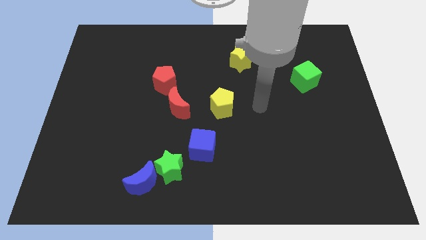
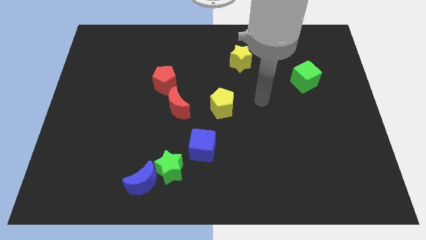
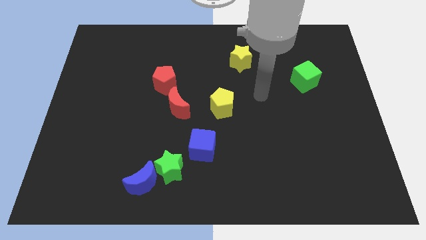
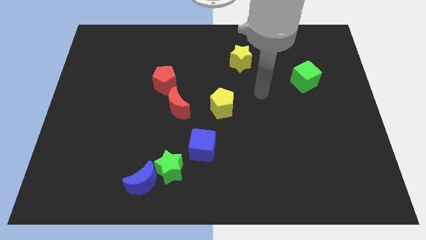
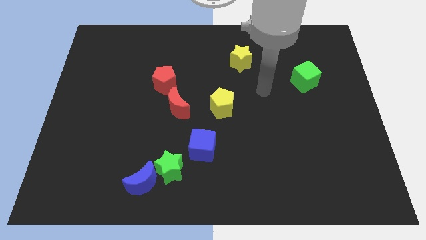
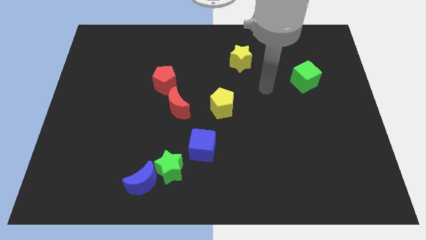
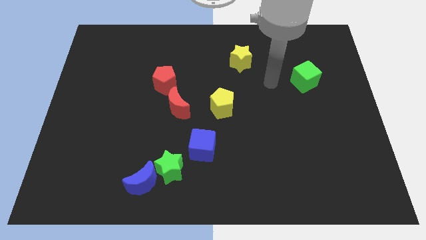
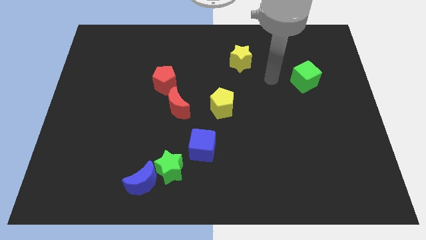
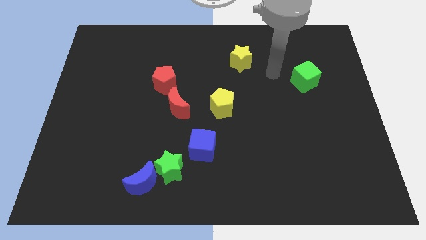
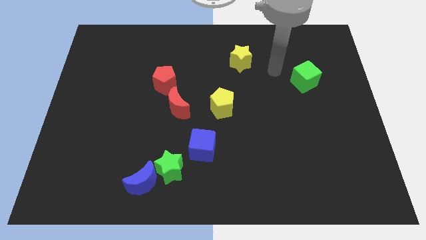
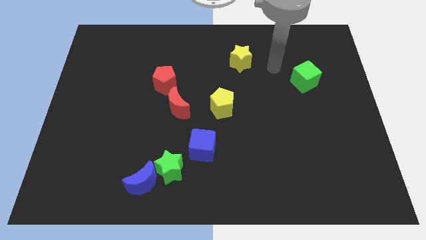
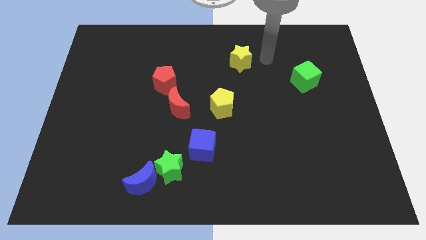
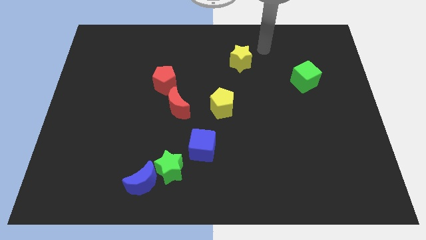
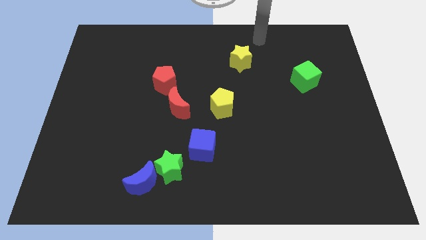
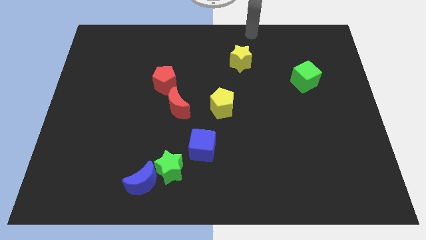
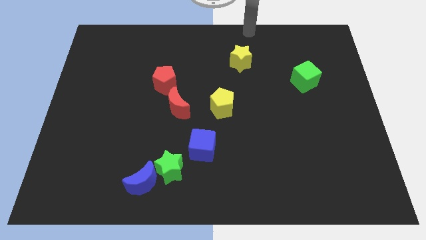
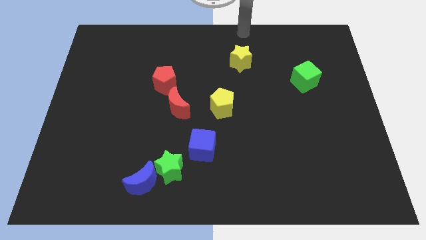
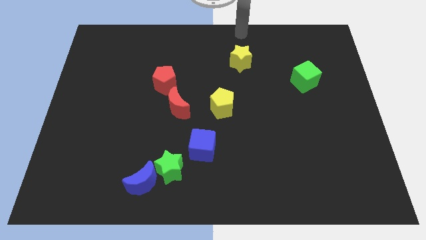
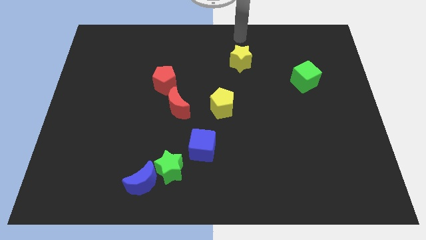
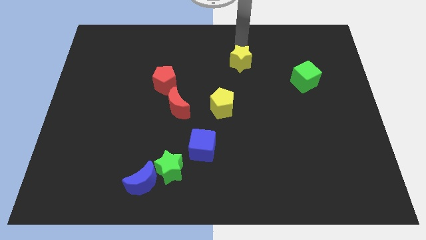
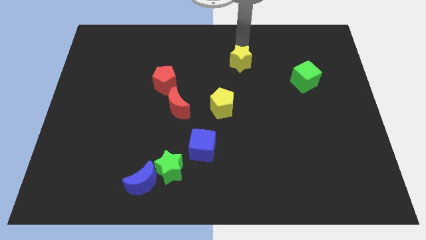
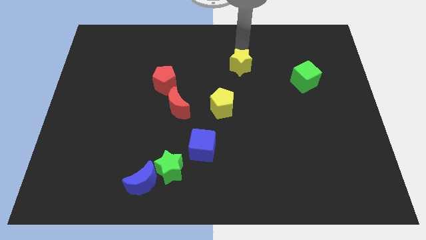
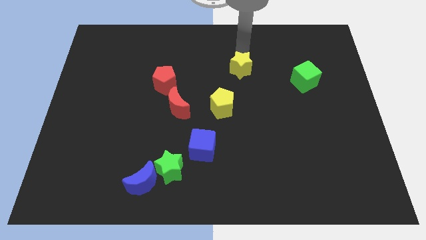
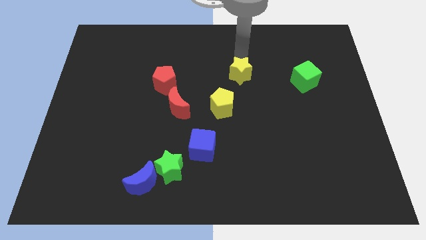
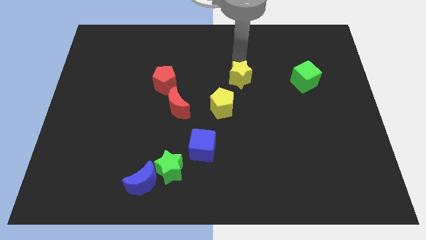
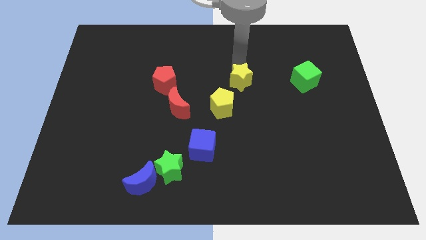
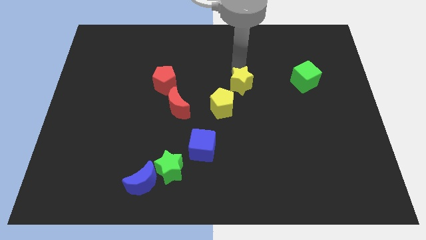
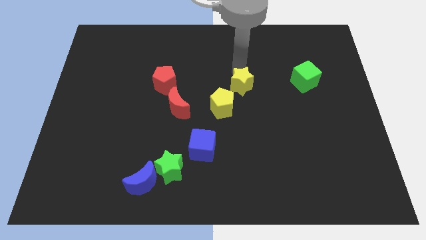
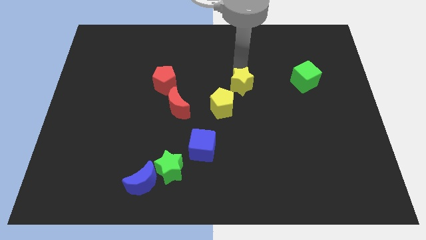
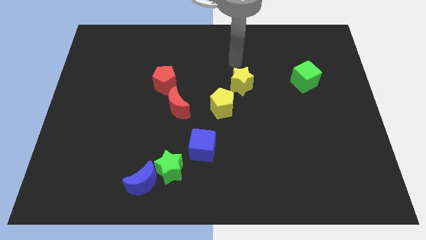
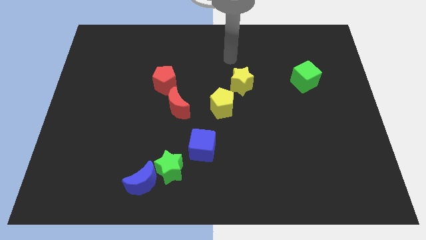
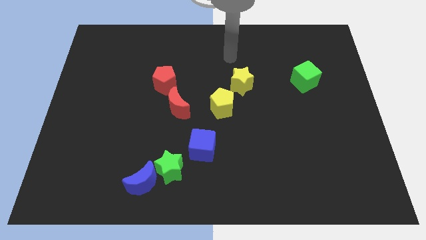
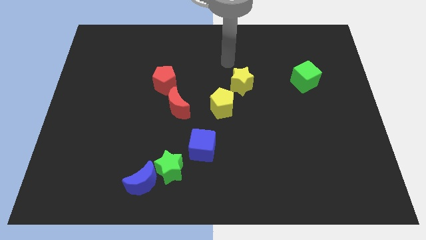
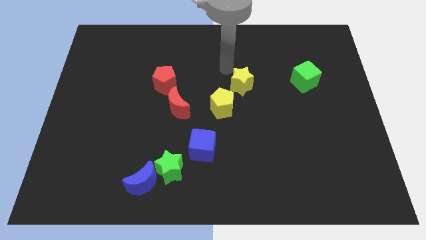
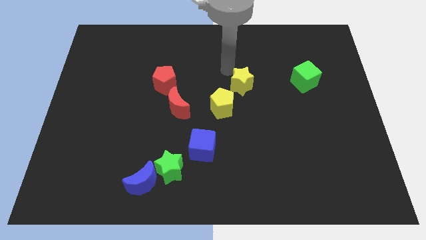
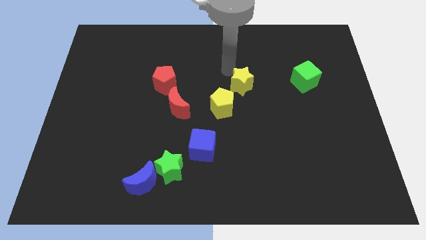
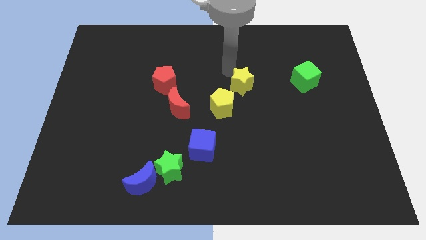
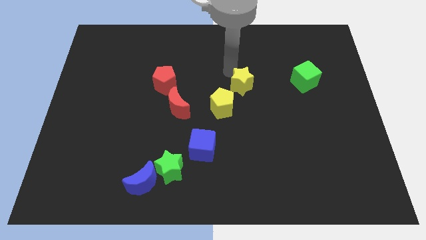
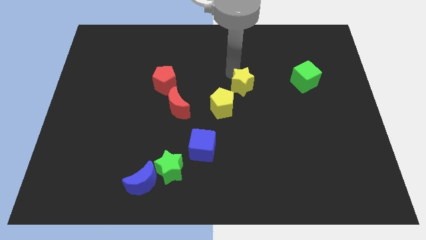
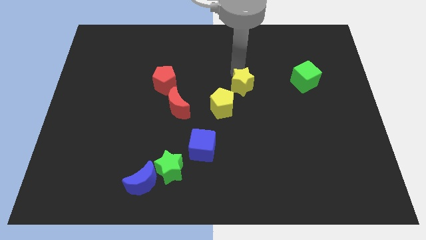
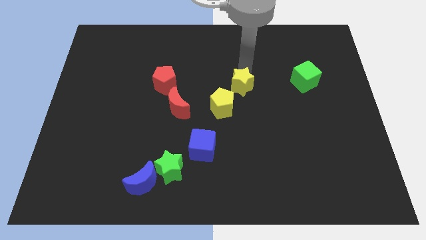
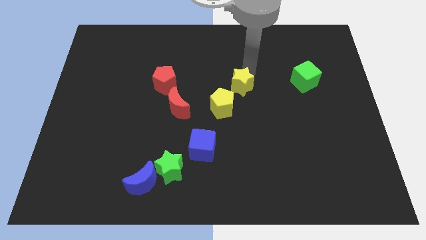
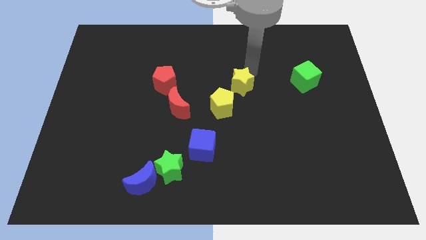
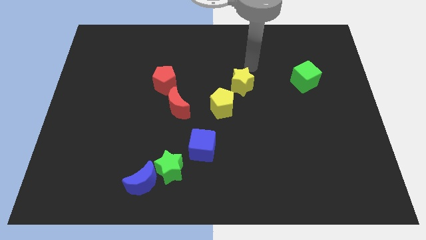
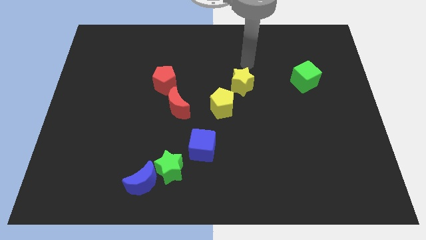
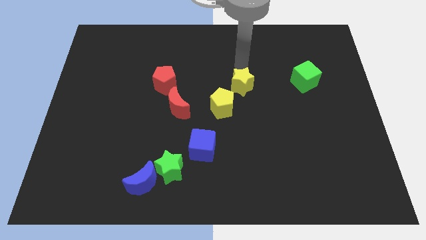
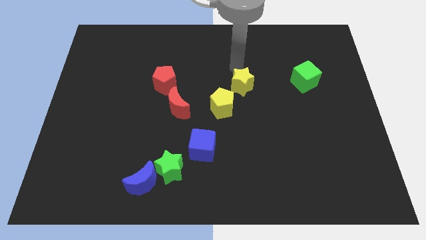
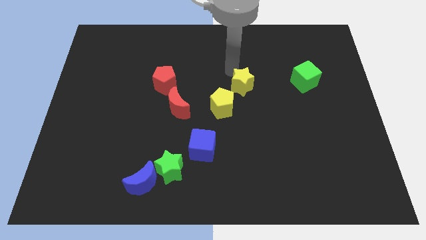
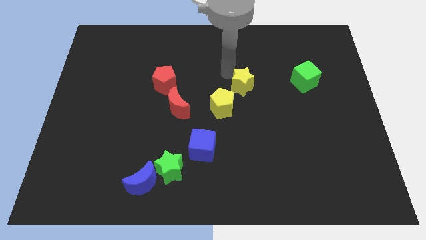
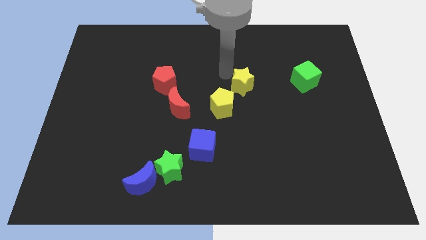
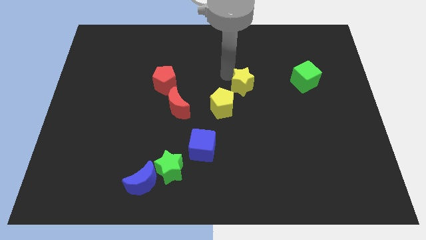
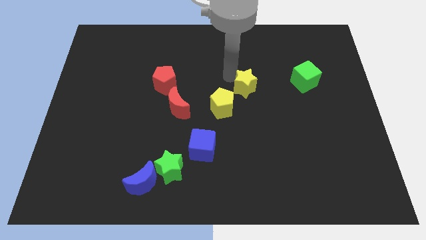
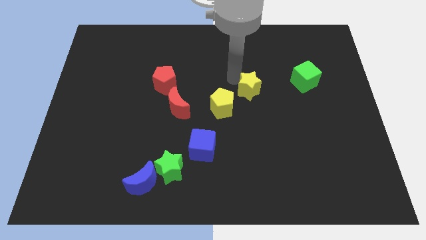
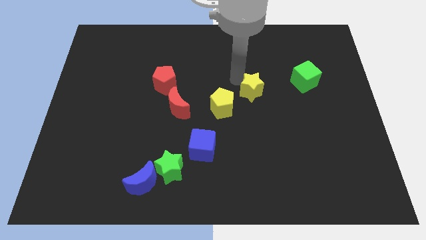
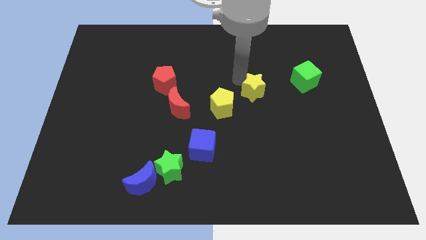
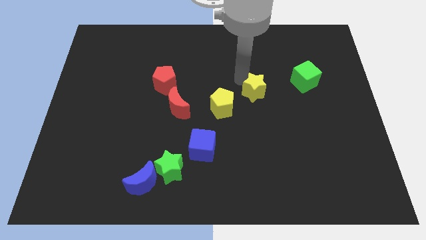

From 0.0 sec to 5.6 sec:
move the yellow star to the top right of the yellow pentagon

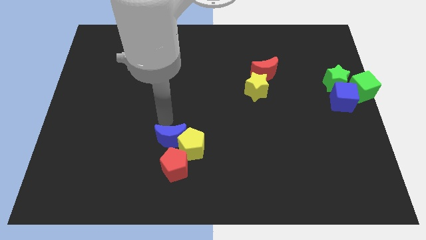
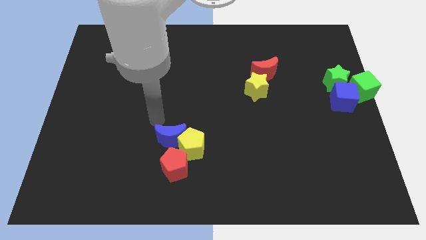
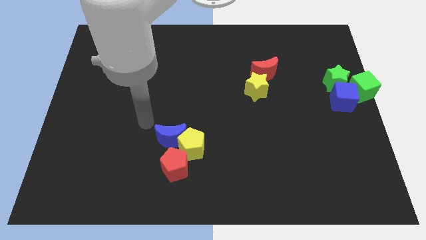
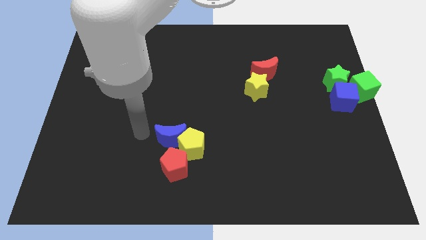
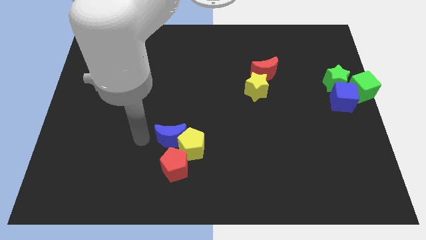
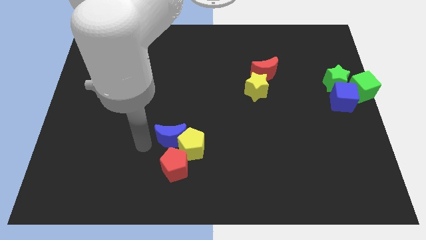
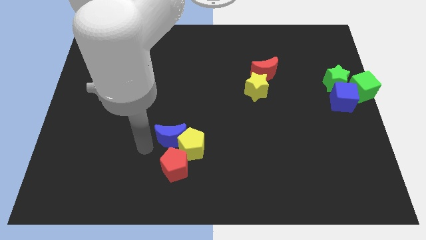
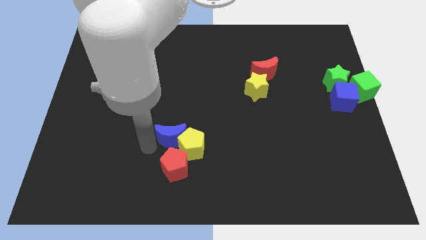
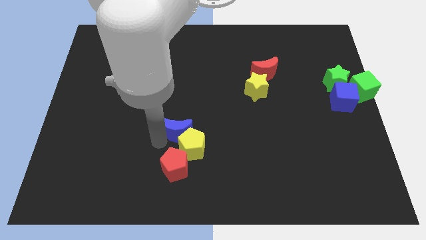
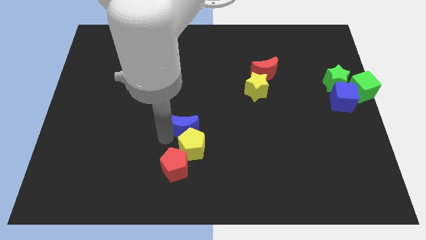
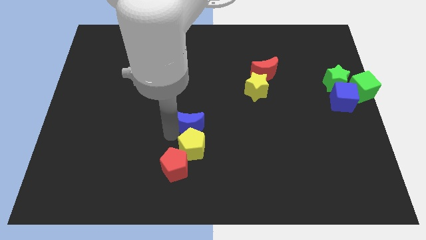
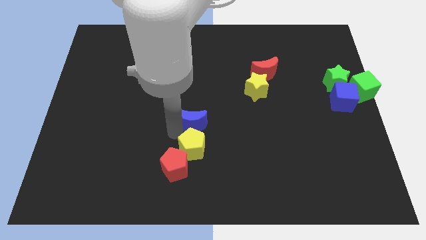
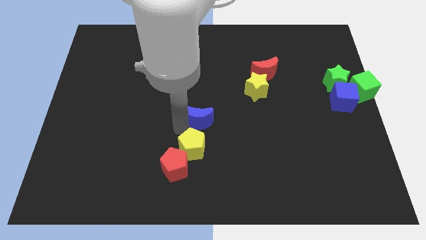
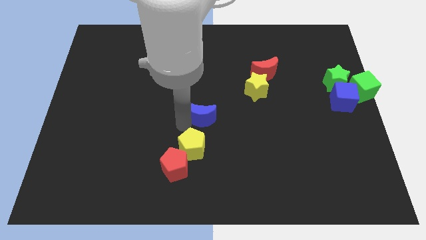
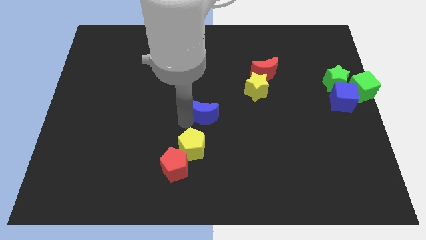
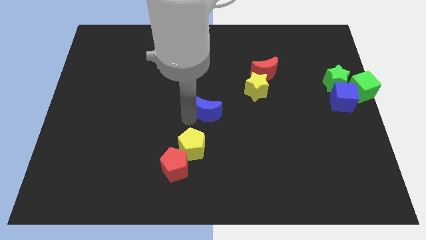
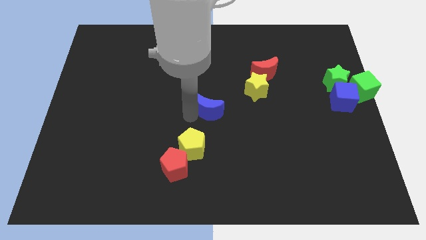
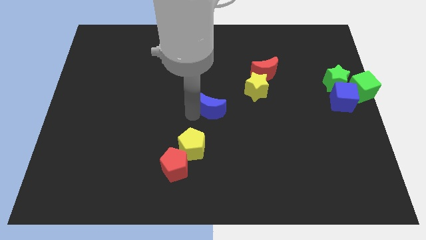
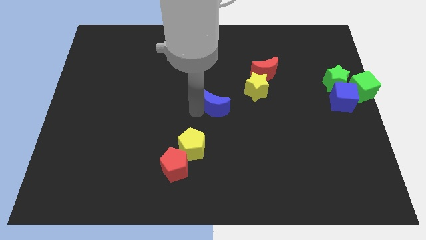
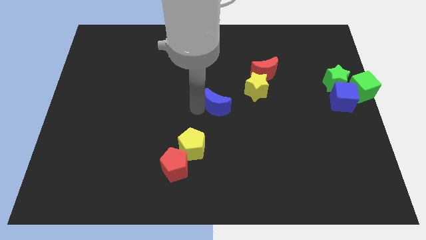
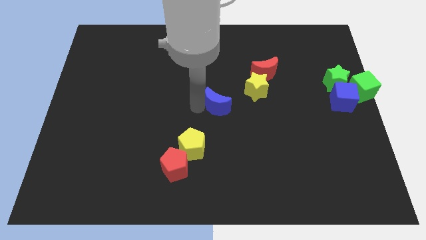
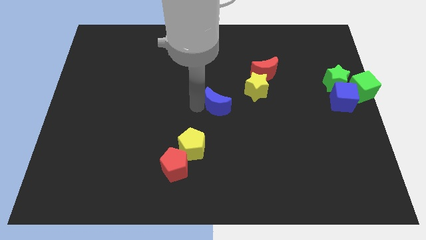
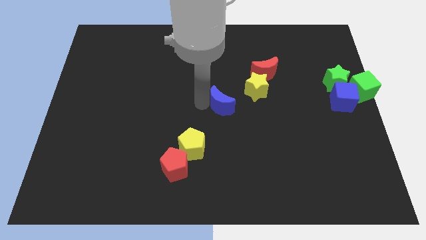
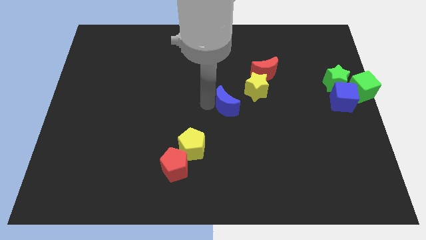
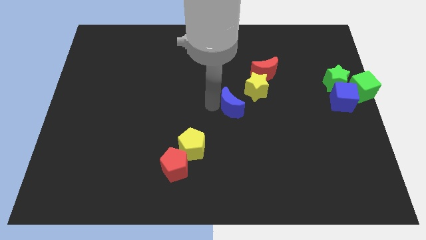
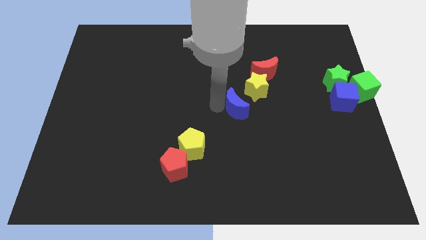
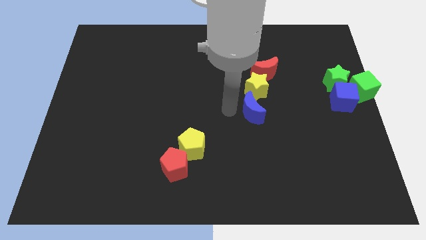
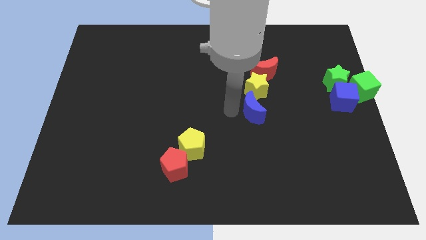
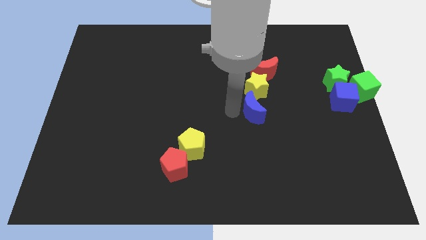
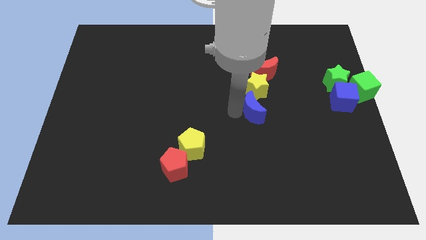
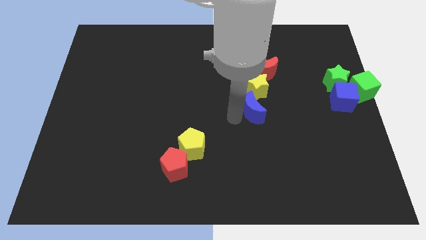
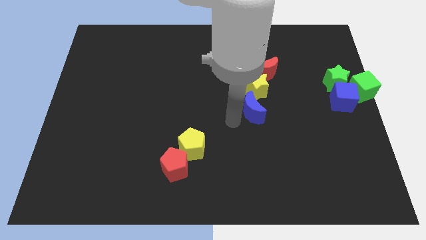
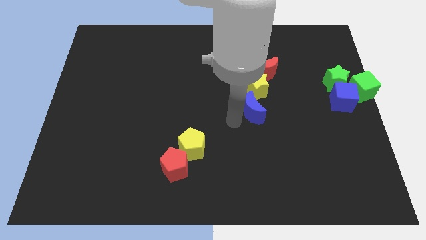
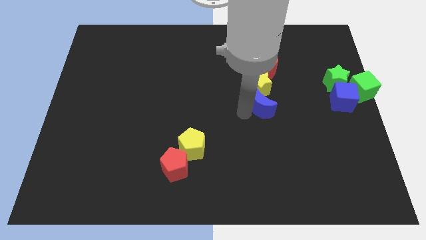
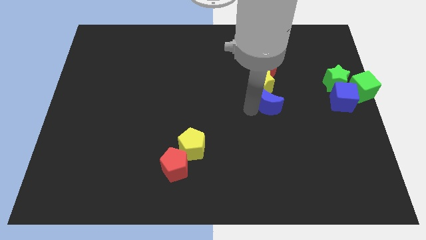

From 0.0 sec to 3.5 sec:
place the blue moon below the yellow star
